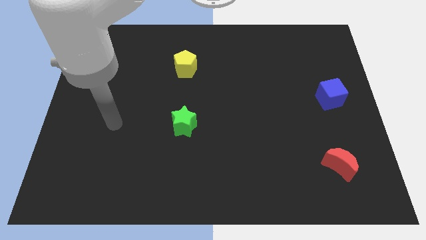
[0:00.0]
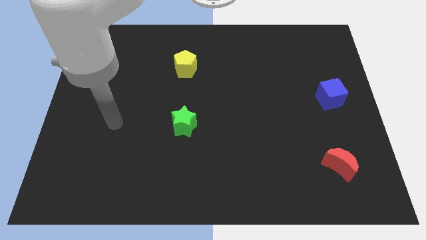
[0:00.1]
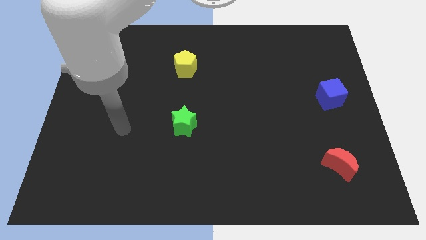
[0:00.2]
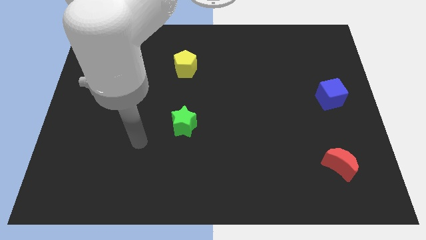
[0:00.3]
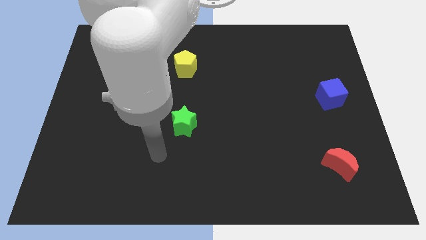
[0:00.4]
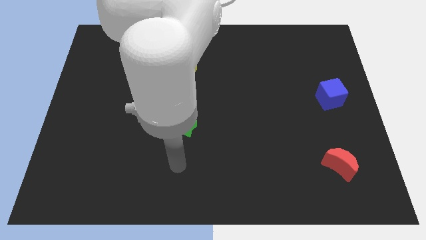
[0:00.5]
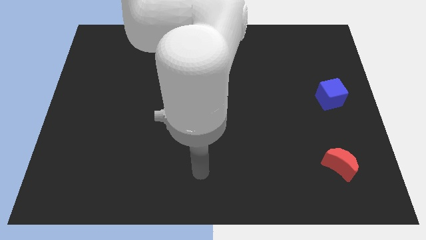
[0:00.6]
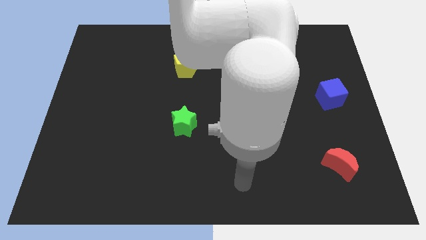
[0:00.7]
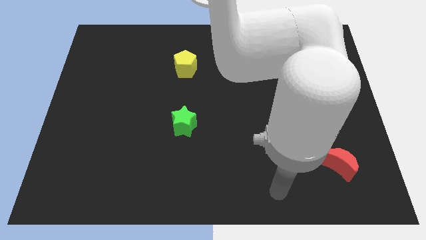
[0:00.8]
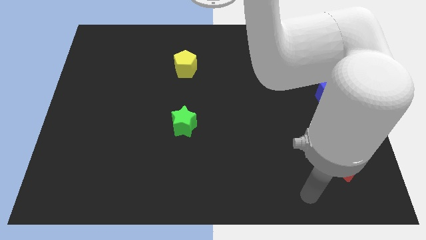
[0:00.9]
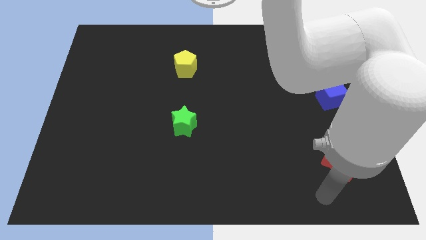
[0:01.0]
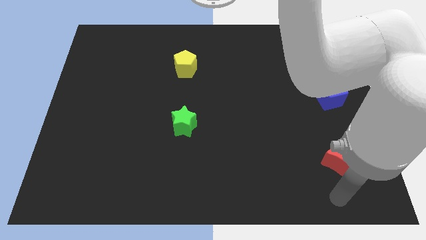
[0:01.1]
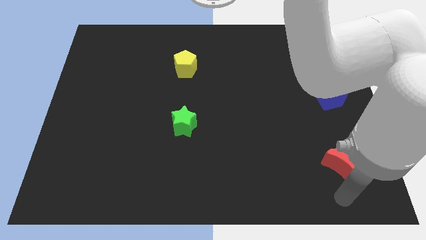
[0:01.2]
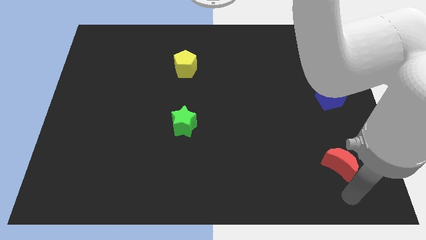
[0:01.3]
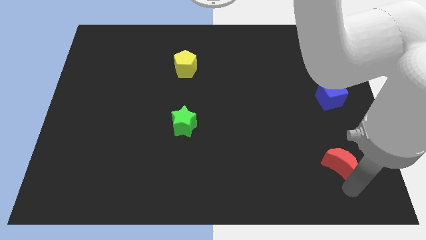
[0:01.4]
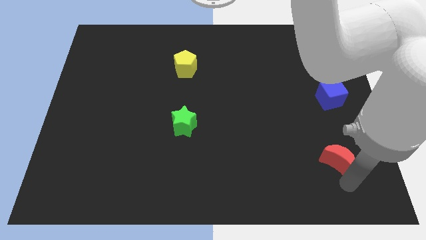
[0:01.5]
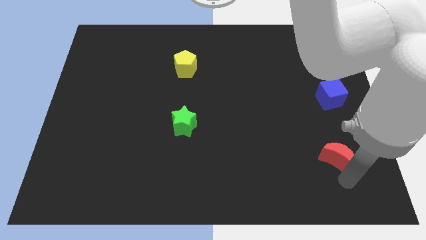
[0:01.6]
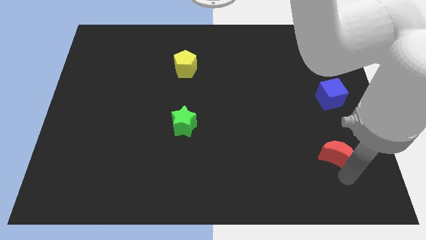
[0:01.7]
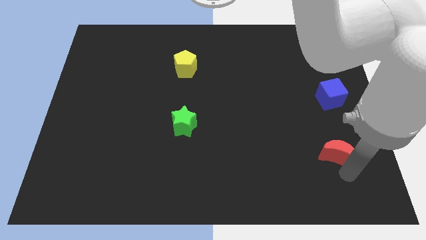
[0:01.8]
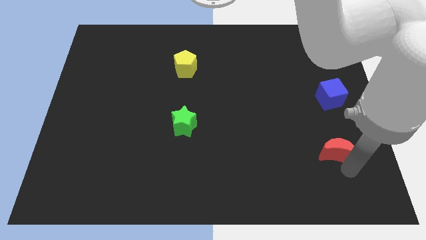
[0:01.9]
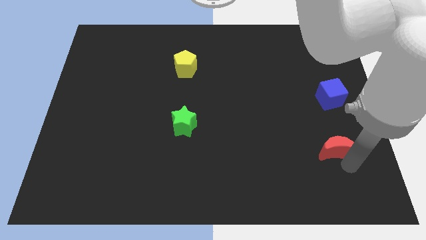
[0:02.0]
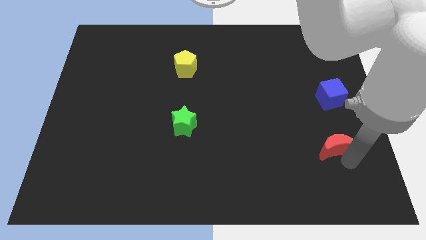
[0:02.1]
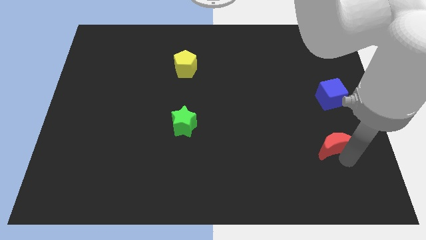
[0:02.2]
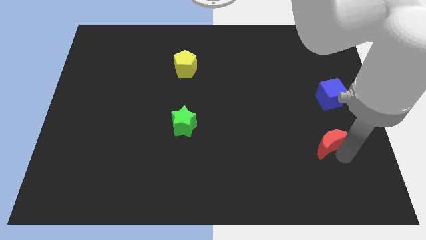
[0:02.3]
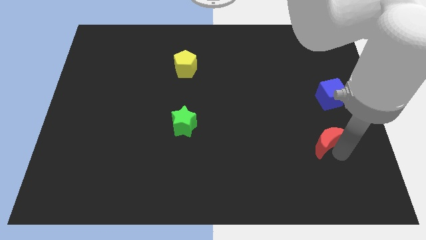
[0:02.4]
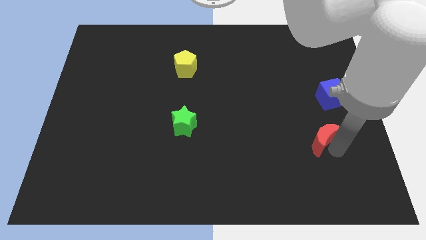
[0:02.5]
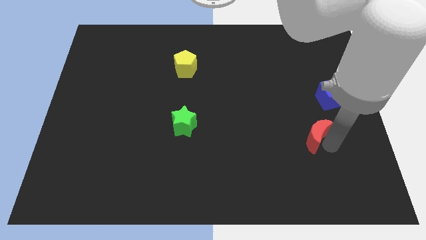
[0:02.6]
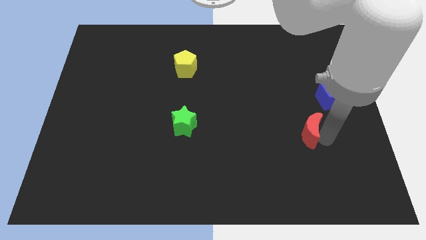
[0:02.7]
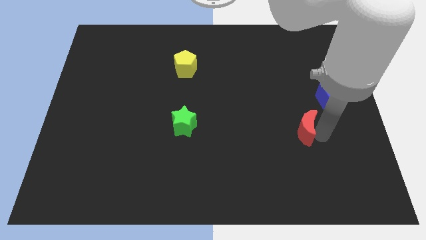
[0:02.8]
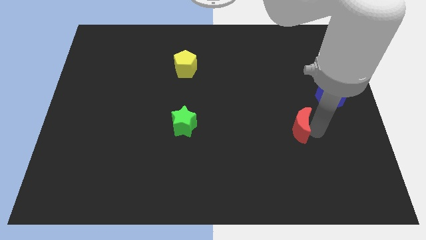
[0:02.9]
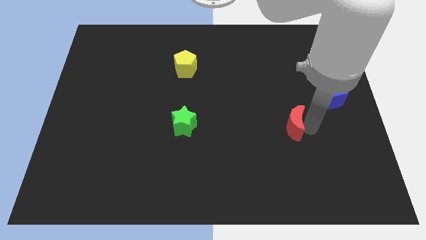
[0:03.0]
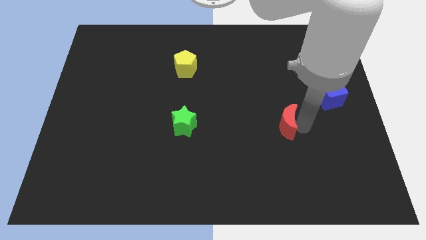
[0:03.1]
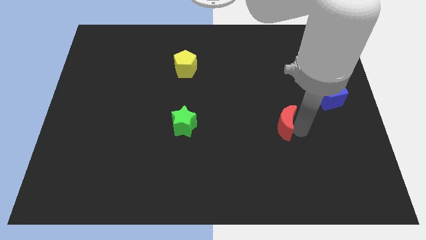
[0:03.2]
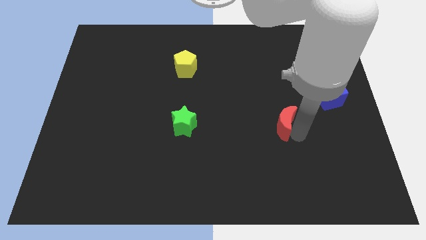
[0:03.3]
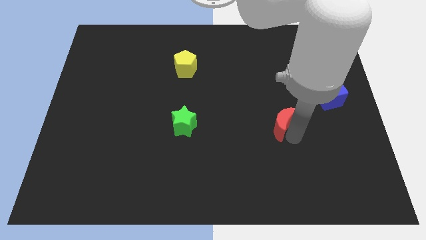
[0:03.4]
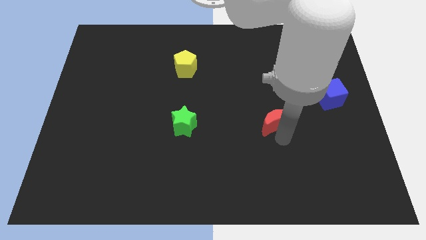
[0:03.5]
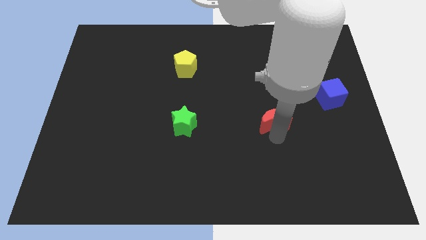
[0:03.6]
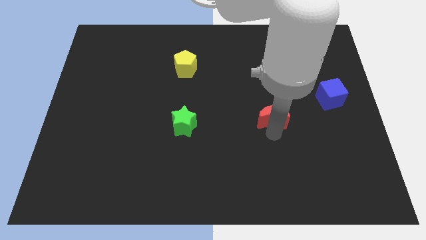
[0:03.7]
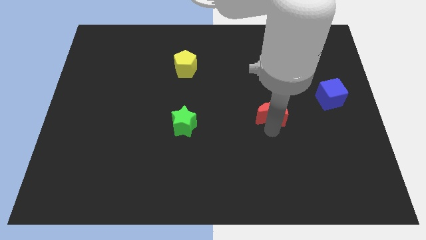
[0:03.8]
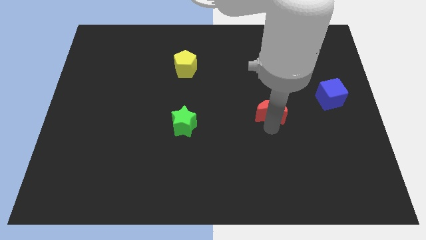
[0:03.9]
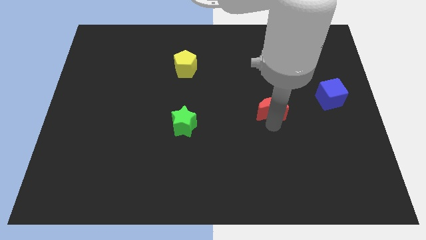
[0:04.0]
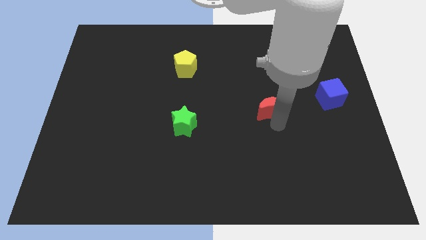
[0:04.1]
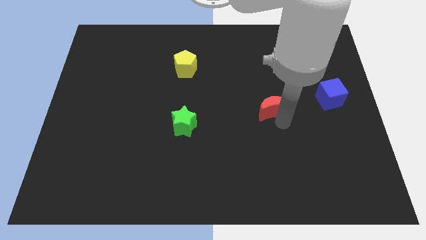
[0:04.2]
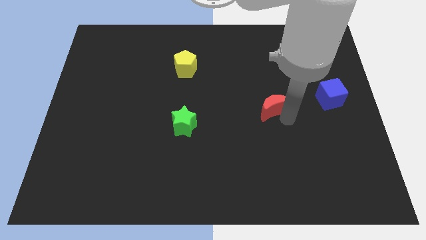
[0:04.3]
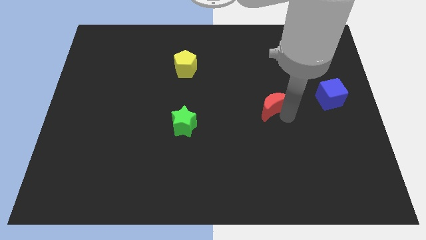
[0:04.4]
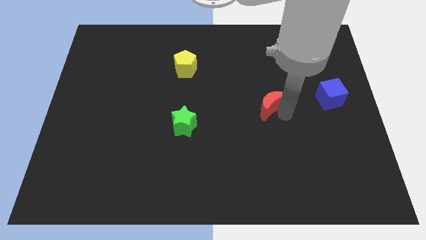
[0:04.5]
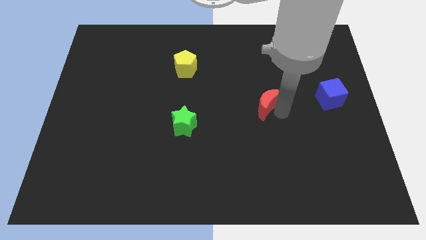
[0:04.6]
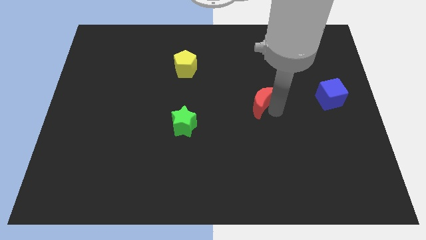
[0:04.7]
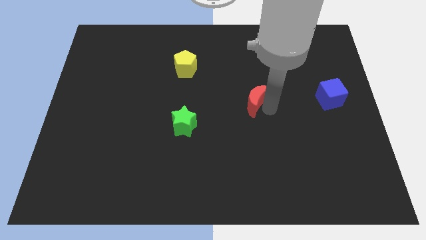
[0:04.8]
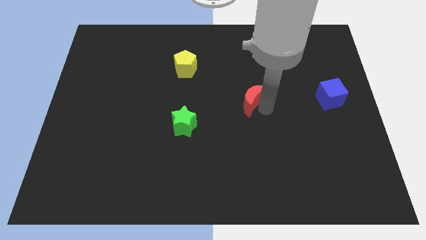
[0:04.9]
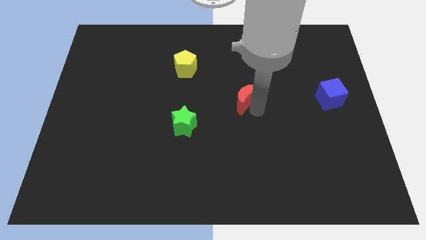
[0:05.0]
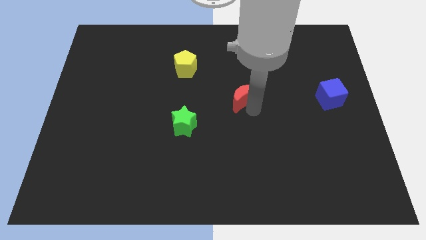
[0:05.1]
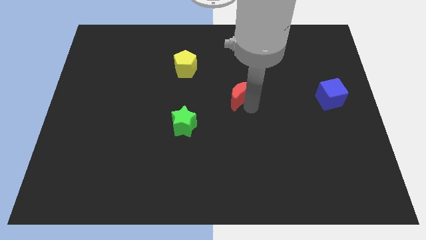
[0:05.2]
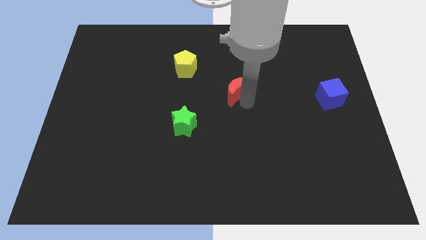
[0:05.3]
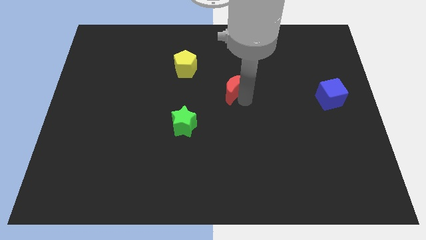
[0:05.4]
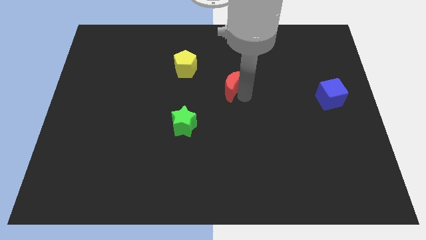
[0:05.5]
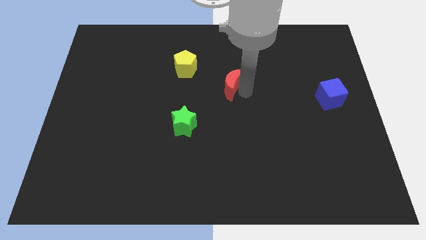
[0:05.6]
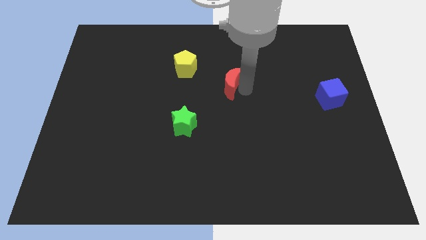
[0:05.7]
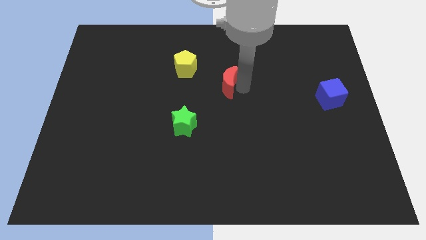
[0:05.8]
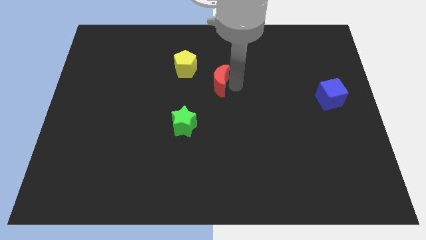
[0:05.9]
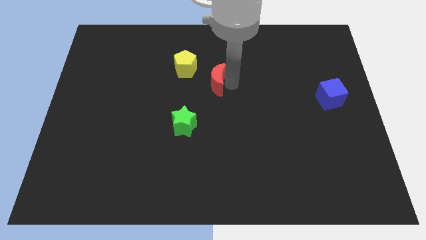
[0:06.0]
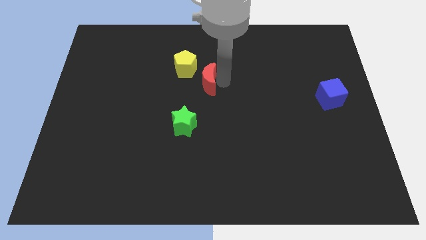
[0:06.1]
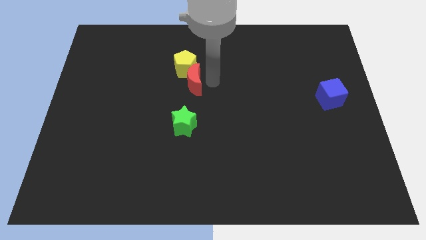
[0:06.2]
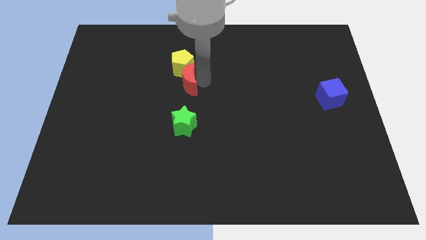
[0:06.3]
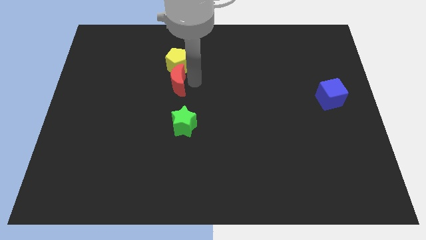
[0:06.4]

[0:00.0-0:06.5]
move the red moon next to the yellow block

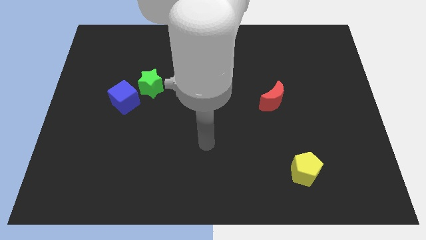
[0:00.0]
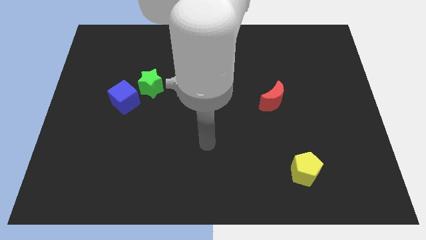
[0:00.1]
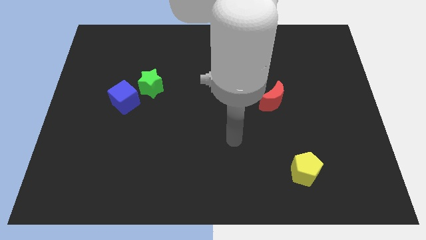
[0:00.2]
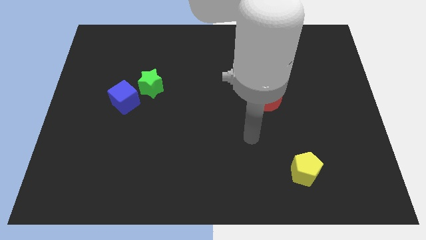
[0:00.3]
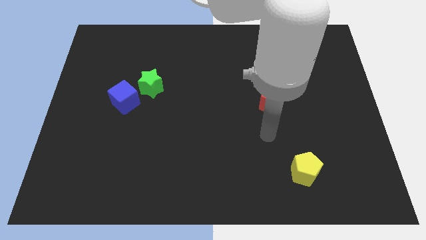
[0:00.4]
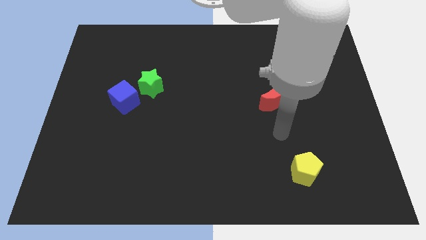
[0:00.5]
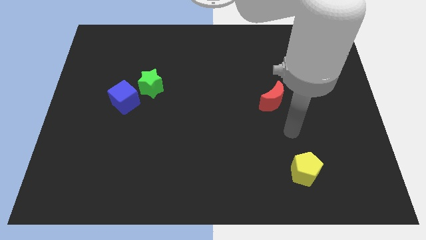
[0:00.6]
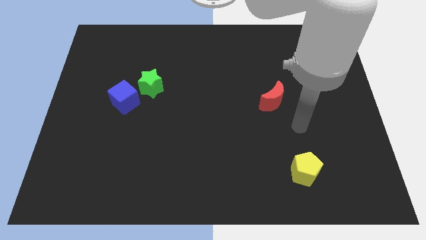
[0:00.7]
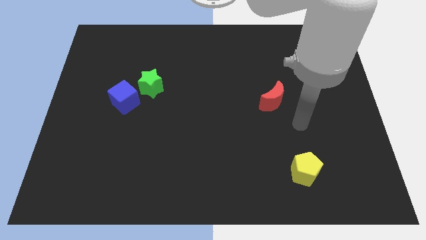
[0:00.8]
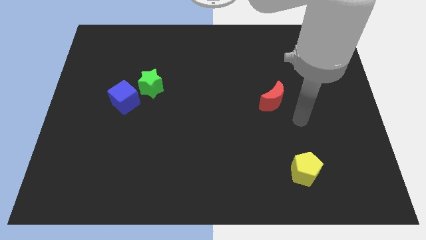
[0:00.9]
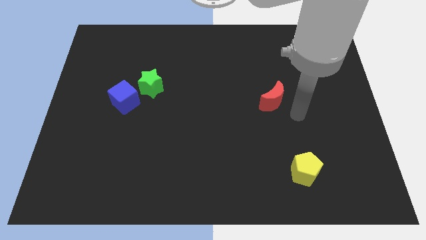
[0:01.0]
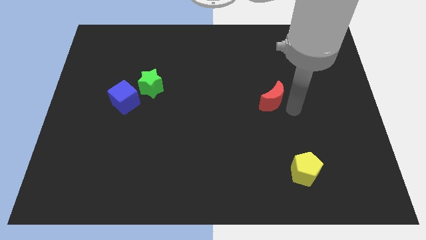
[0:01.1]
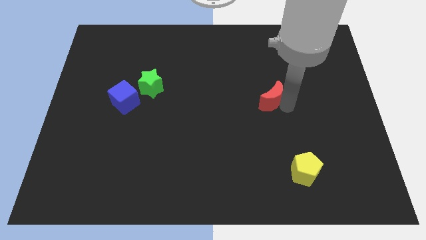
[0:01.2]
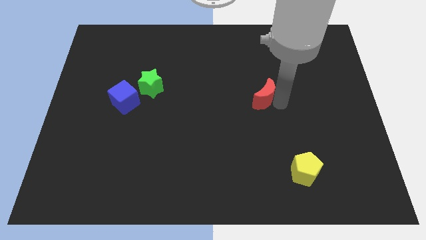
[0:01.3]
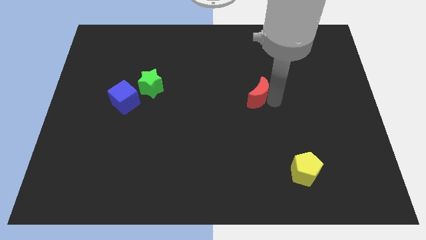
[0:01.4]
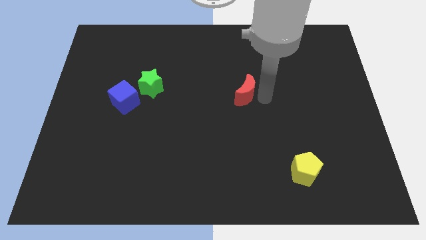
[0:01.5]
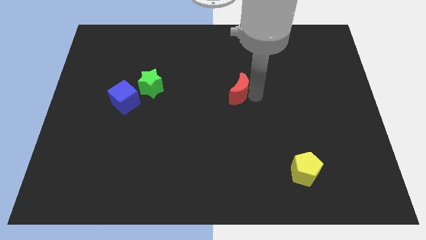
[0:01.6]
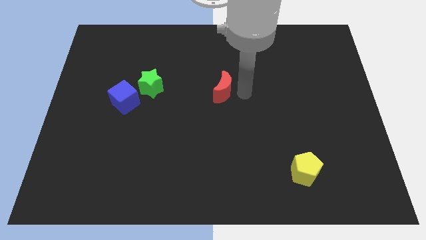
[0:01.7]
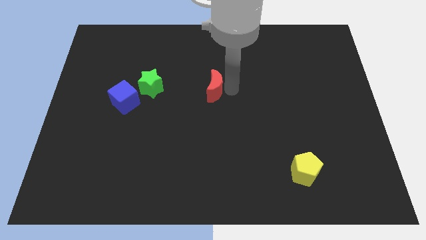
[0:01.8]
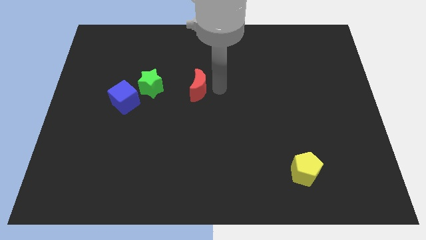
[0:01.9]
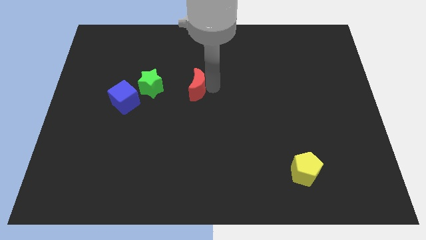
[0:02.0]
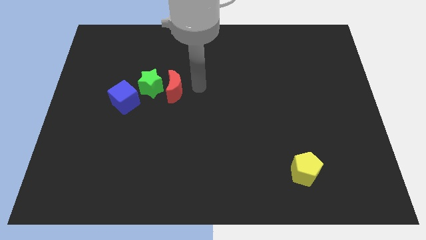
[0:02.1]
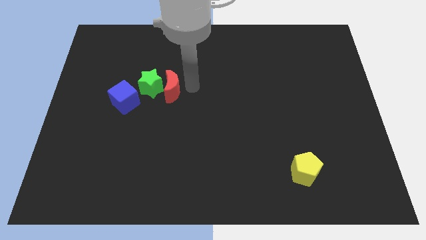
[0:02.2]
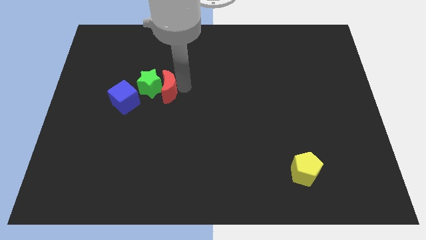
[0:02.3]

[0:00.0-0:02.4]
put the red moon towards the green block
